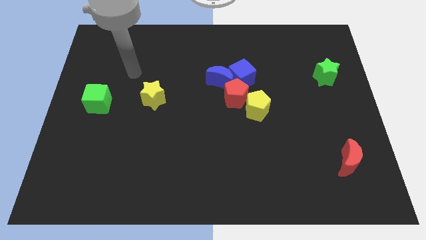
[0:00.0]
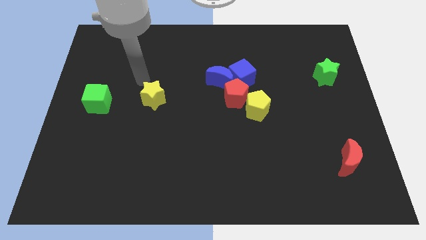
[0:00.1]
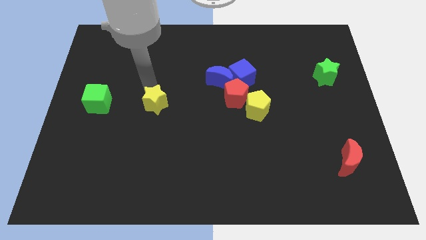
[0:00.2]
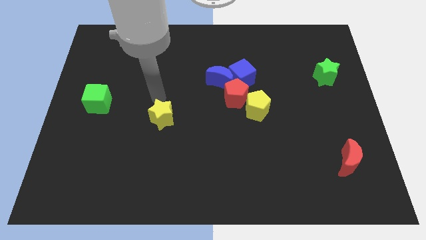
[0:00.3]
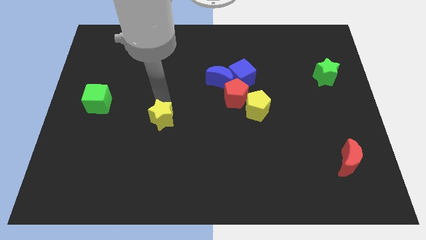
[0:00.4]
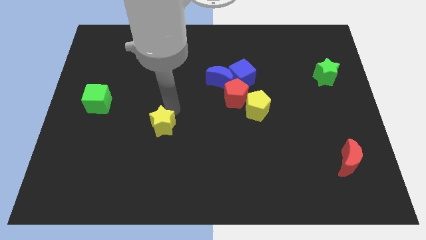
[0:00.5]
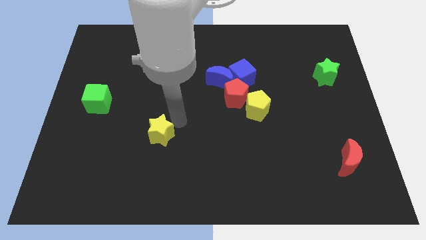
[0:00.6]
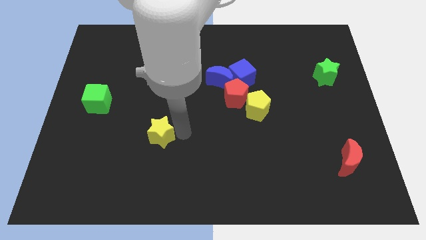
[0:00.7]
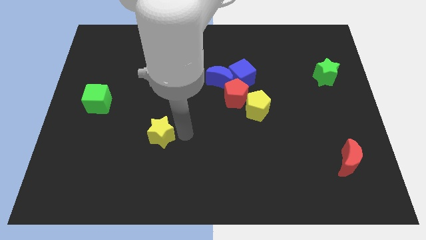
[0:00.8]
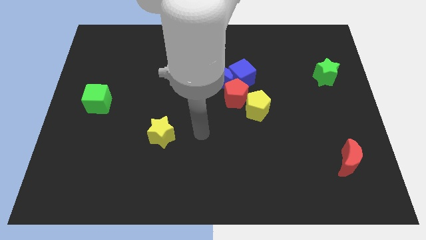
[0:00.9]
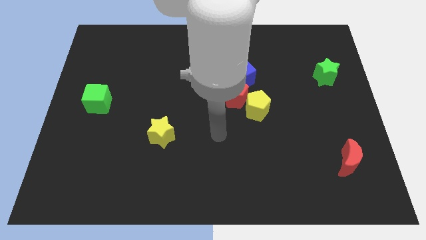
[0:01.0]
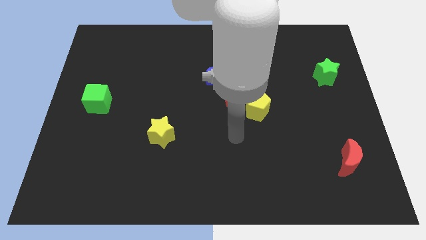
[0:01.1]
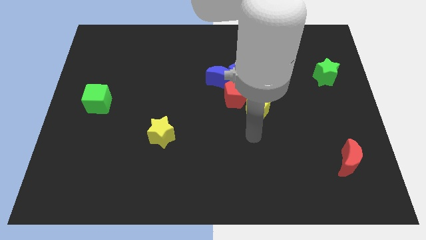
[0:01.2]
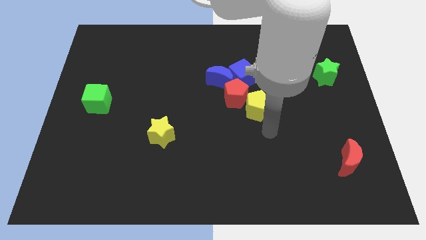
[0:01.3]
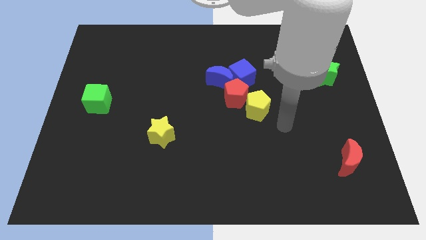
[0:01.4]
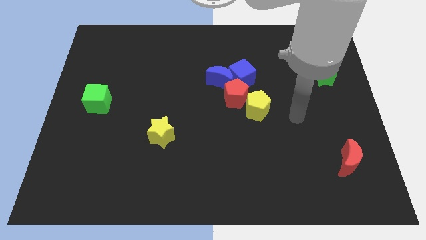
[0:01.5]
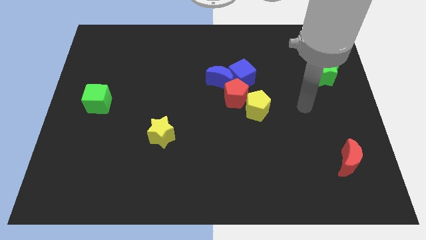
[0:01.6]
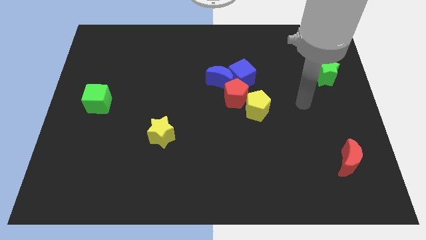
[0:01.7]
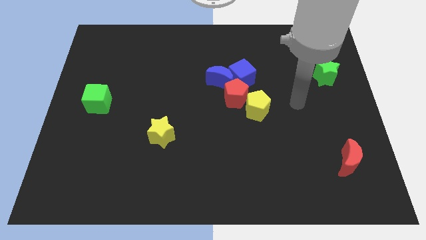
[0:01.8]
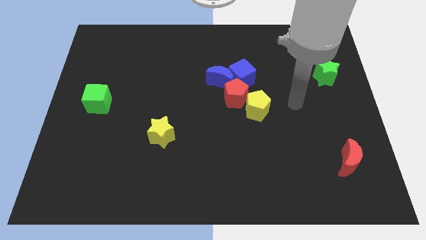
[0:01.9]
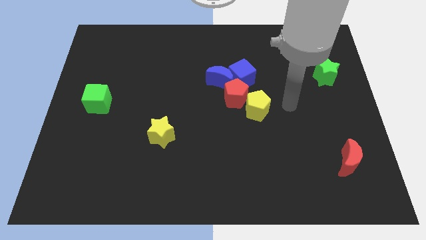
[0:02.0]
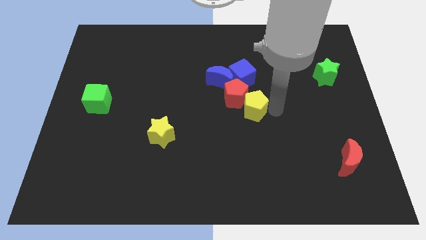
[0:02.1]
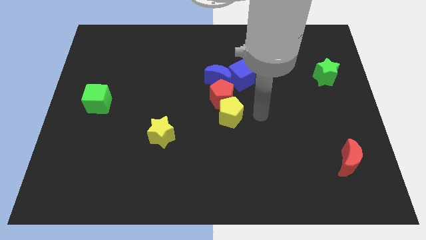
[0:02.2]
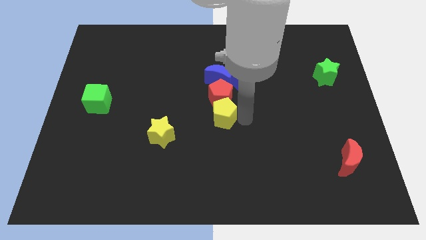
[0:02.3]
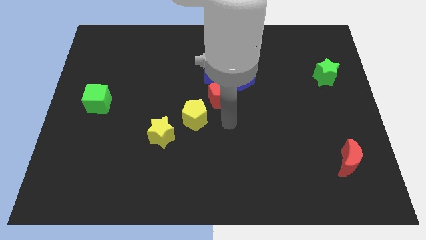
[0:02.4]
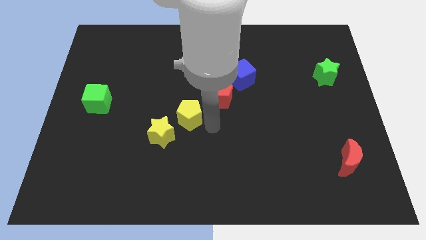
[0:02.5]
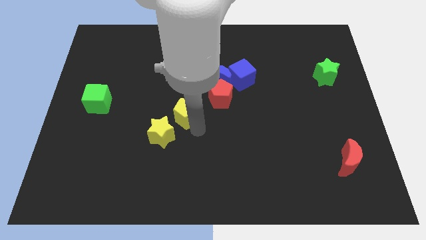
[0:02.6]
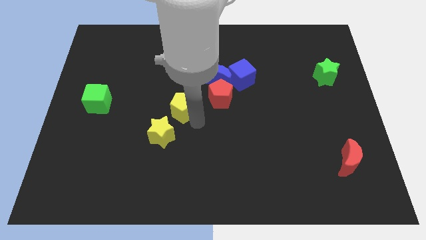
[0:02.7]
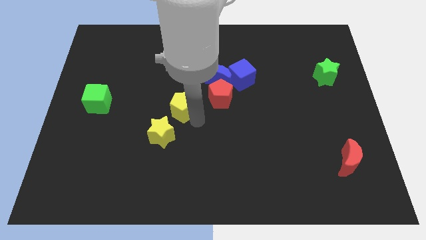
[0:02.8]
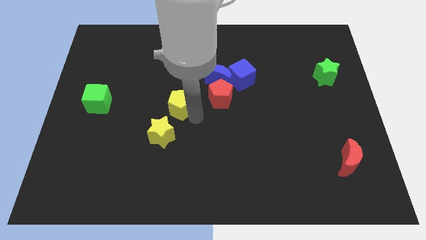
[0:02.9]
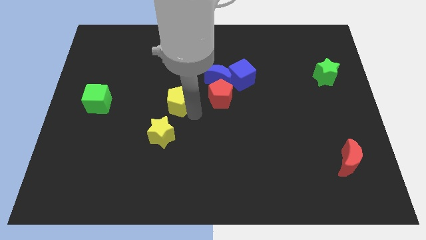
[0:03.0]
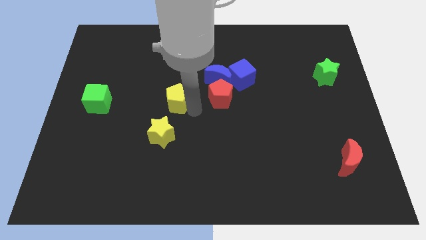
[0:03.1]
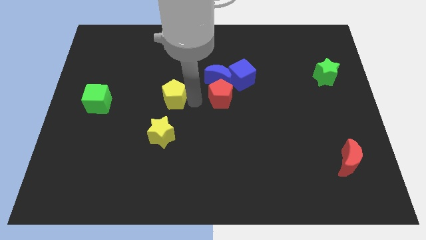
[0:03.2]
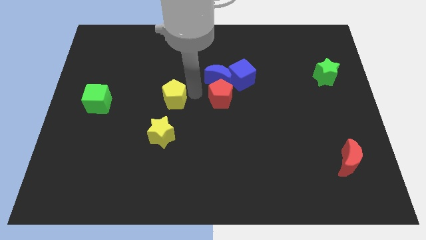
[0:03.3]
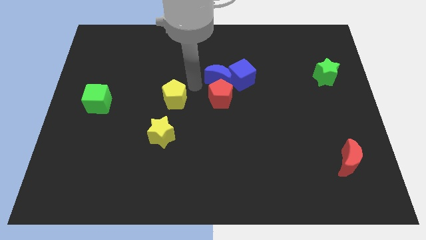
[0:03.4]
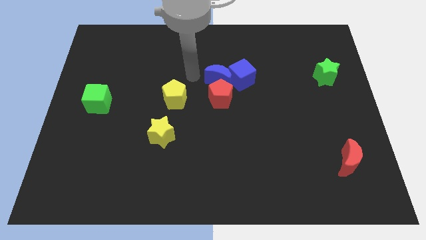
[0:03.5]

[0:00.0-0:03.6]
place the yellow star and yellow pentagon in a vertical line at the right side of the green cube

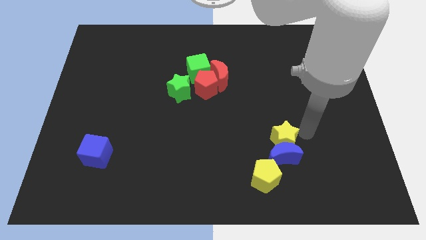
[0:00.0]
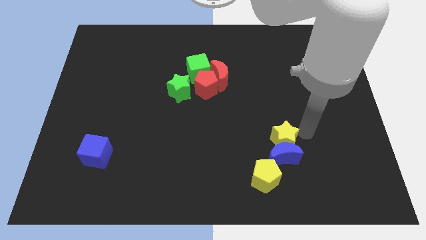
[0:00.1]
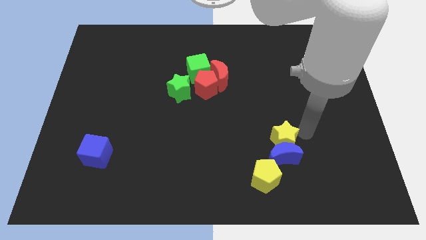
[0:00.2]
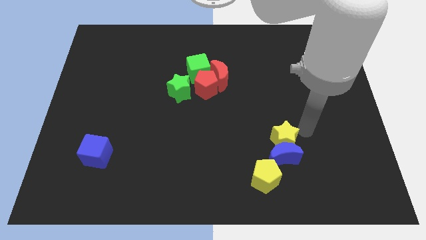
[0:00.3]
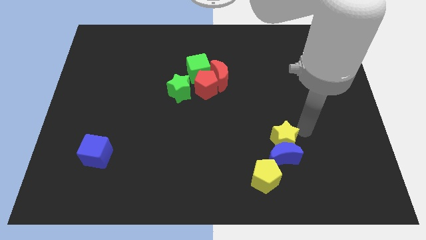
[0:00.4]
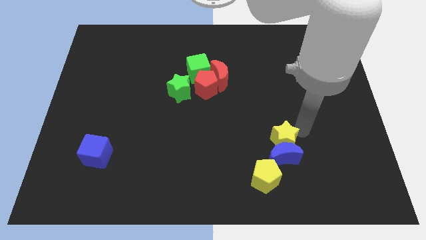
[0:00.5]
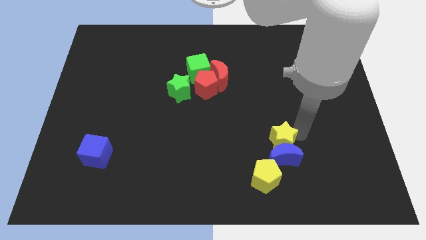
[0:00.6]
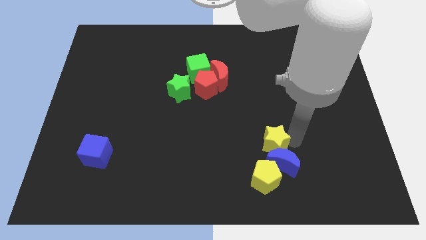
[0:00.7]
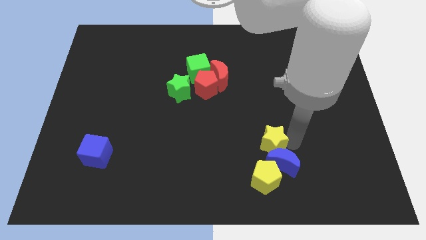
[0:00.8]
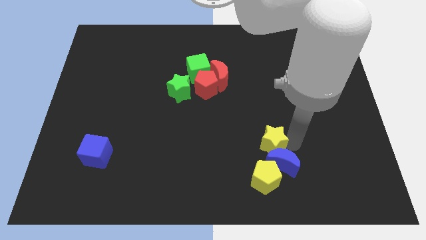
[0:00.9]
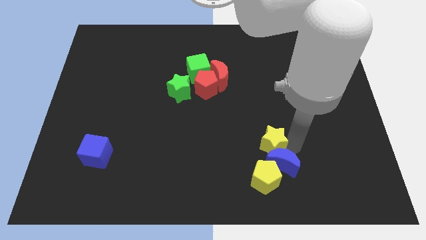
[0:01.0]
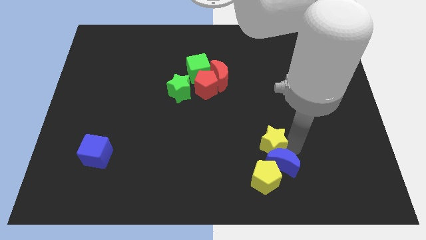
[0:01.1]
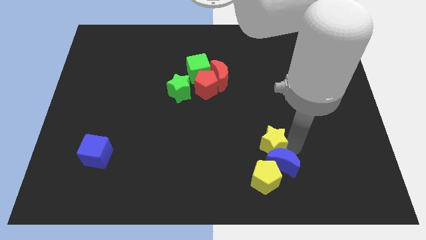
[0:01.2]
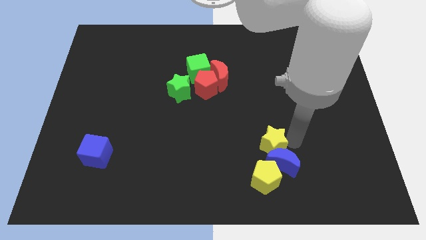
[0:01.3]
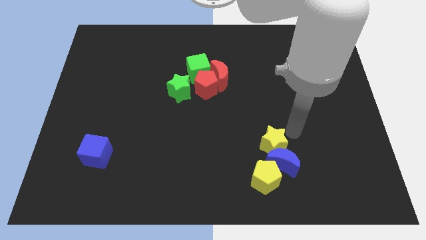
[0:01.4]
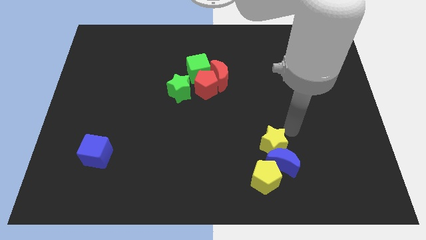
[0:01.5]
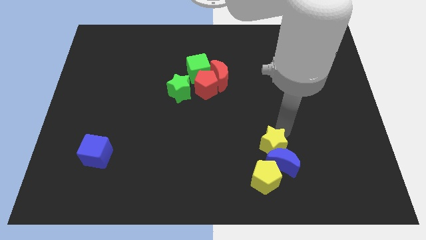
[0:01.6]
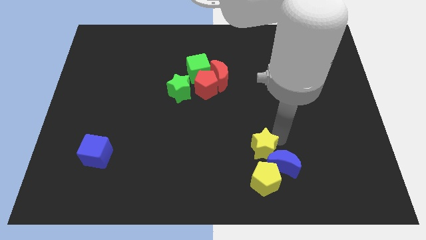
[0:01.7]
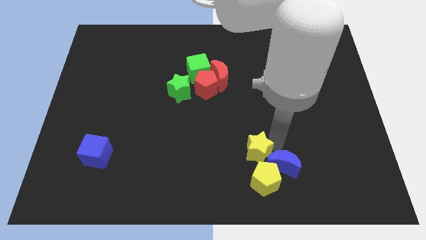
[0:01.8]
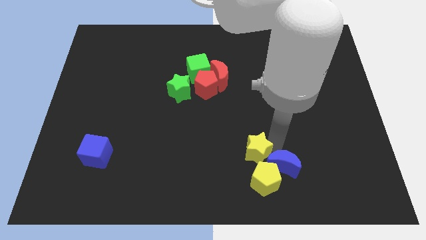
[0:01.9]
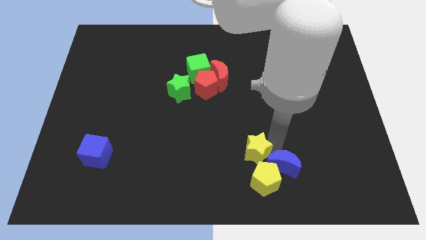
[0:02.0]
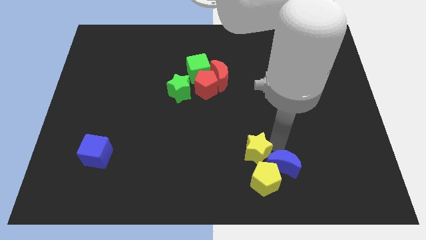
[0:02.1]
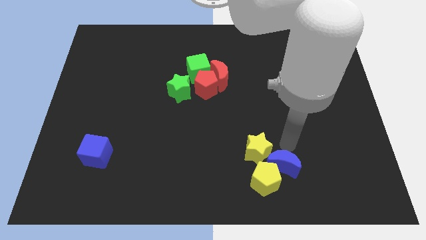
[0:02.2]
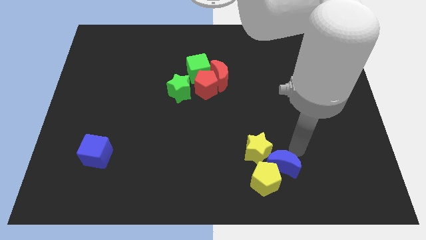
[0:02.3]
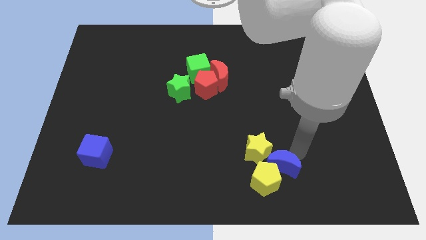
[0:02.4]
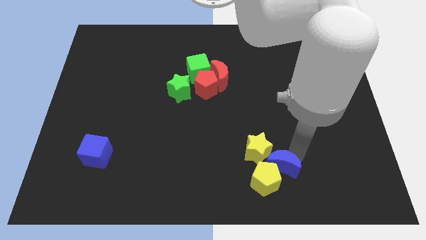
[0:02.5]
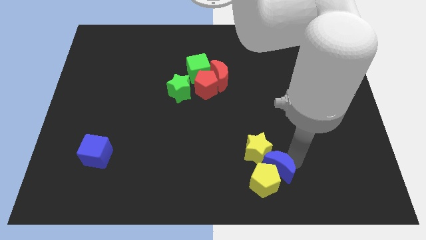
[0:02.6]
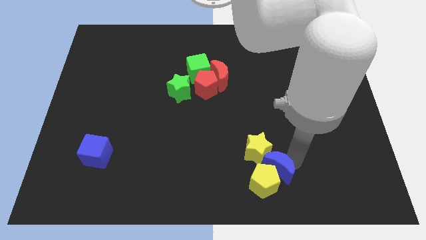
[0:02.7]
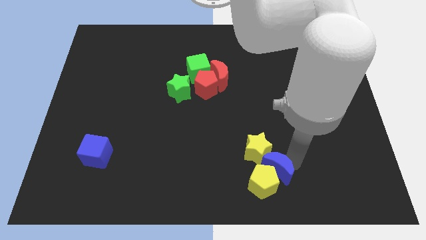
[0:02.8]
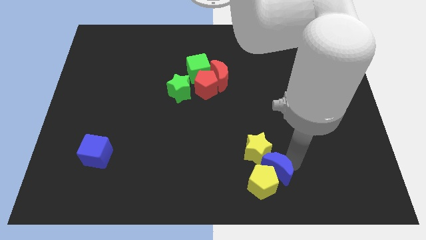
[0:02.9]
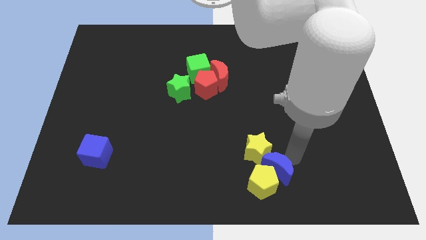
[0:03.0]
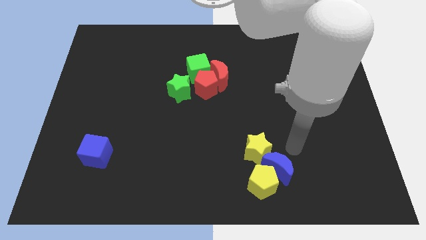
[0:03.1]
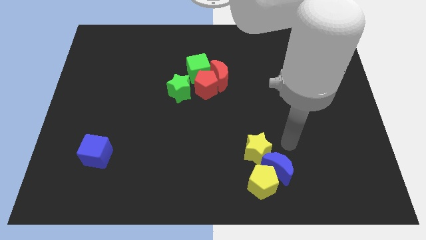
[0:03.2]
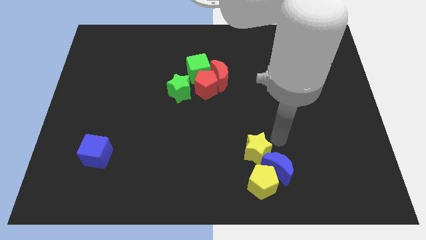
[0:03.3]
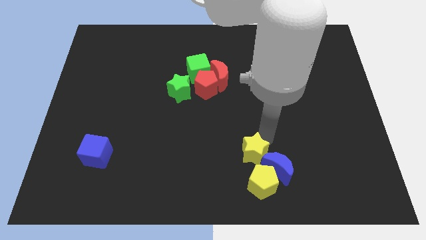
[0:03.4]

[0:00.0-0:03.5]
push the blue crescent into the yellow pentagon

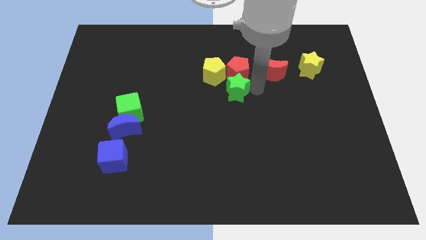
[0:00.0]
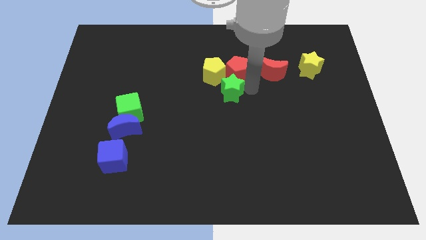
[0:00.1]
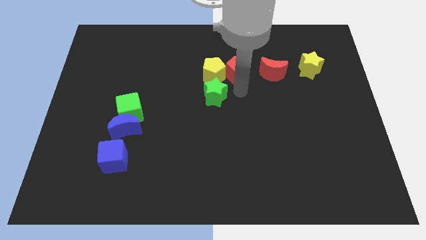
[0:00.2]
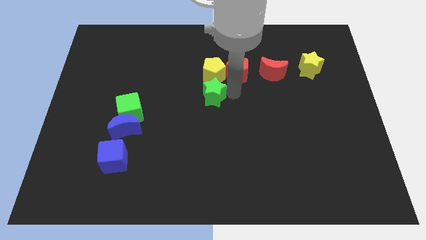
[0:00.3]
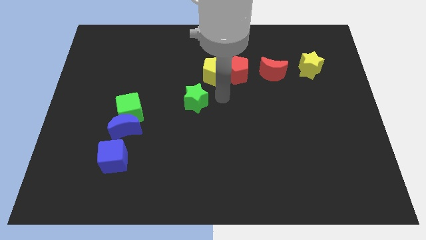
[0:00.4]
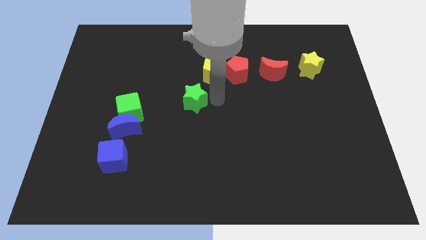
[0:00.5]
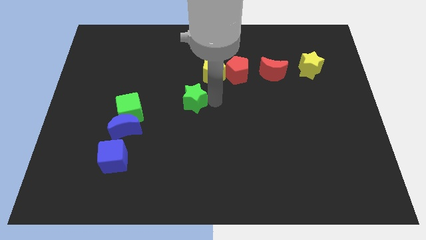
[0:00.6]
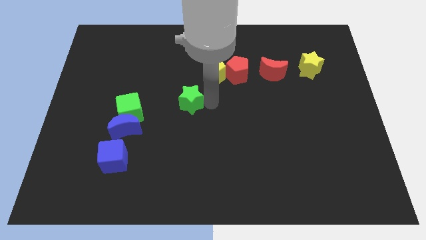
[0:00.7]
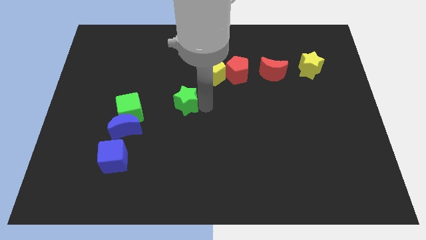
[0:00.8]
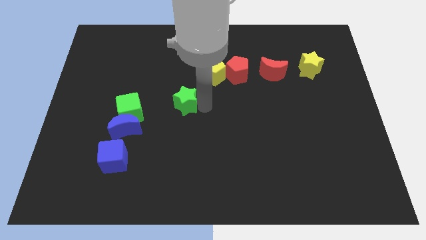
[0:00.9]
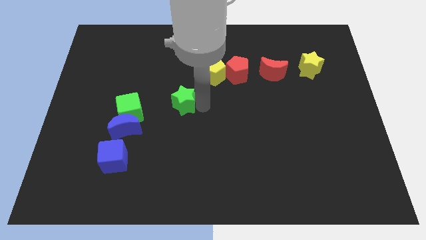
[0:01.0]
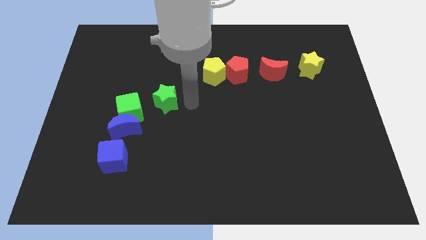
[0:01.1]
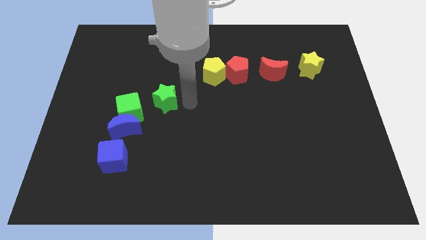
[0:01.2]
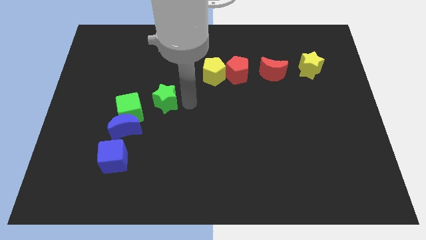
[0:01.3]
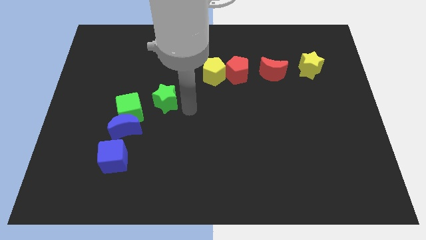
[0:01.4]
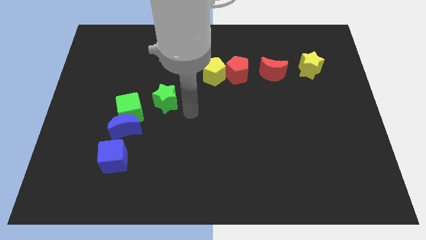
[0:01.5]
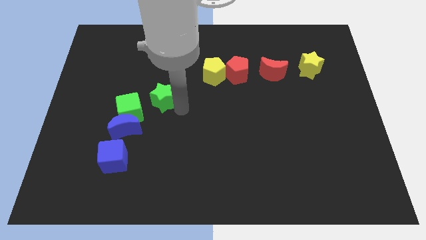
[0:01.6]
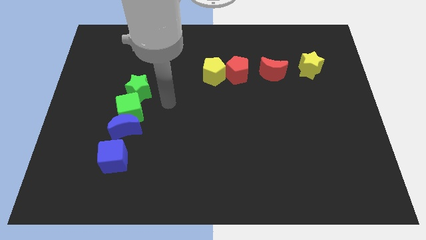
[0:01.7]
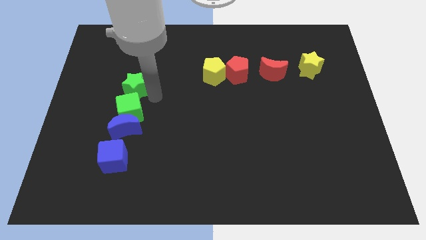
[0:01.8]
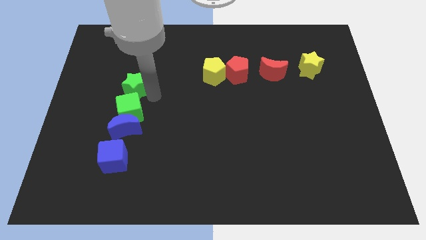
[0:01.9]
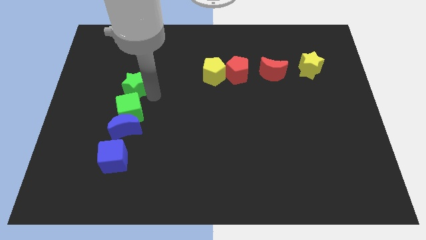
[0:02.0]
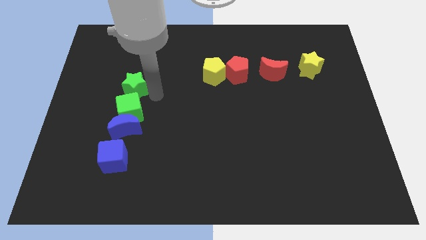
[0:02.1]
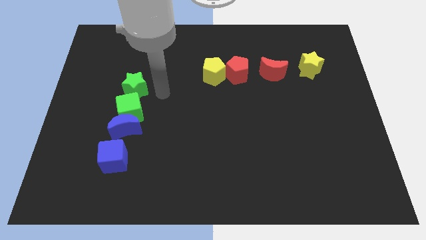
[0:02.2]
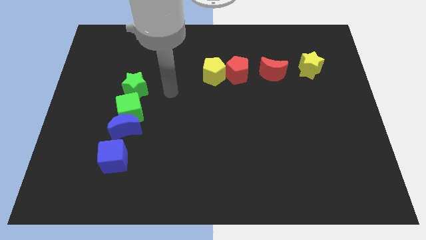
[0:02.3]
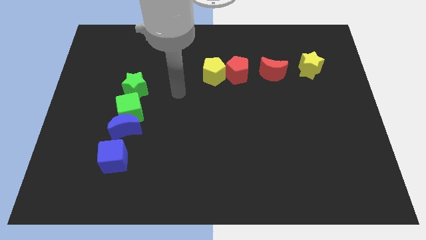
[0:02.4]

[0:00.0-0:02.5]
move the green star above to the green cube
